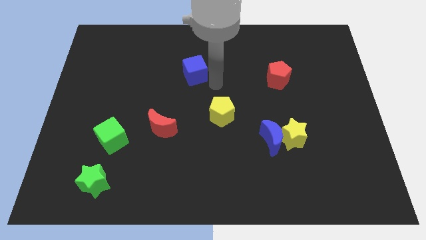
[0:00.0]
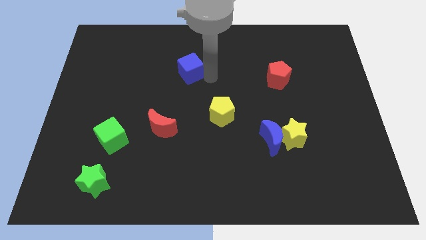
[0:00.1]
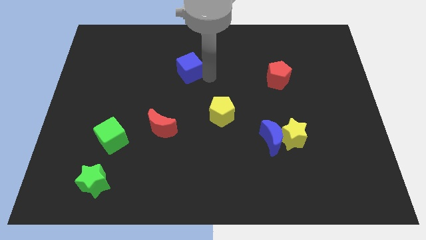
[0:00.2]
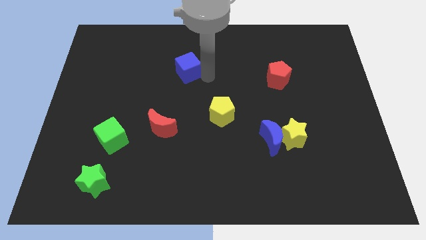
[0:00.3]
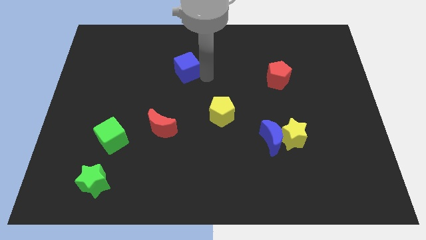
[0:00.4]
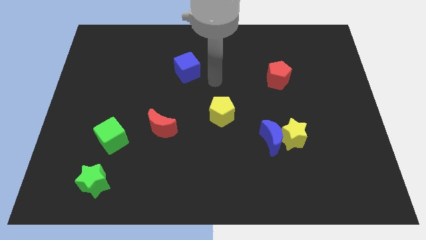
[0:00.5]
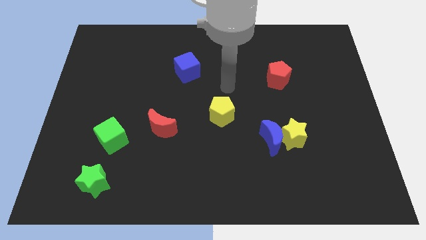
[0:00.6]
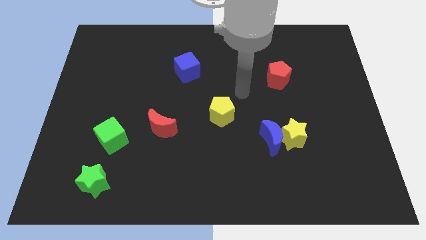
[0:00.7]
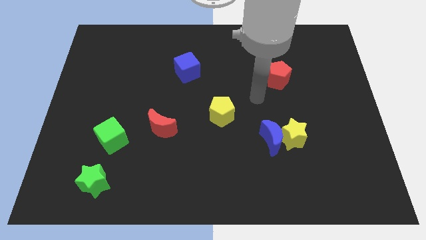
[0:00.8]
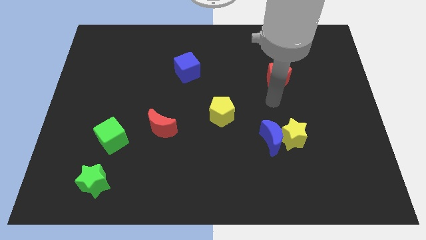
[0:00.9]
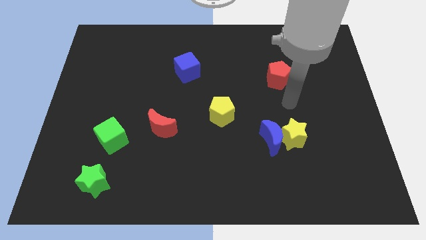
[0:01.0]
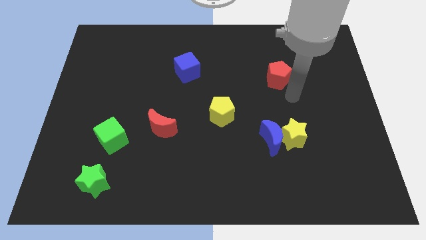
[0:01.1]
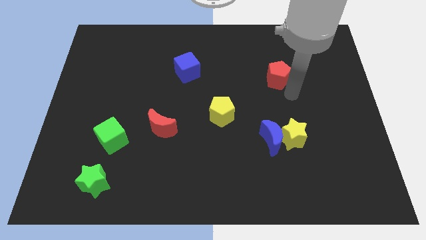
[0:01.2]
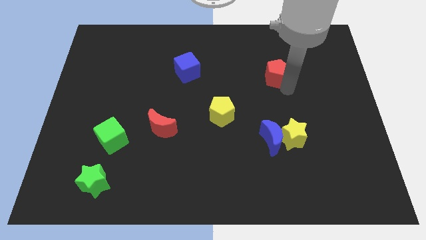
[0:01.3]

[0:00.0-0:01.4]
move arm to the red pentagon

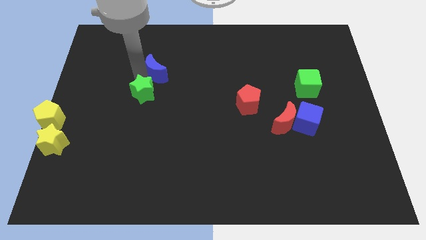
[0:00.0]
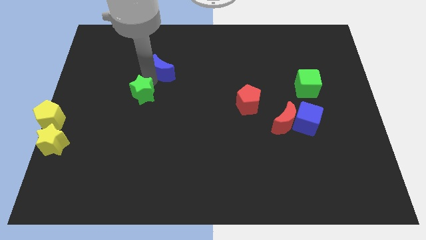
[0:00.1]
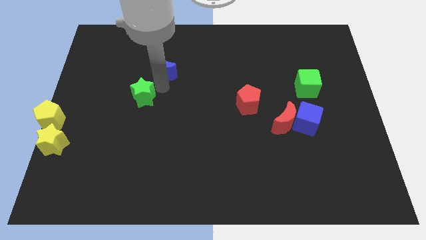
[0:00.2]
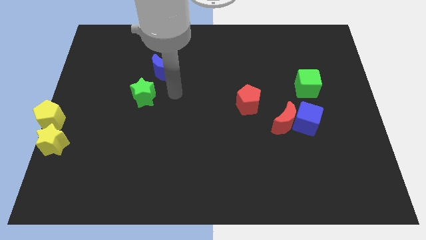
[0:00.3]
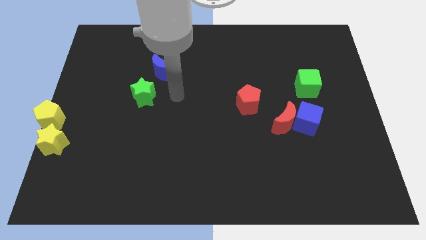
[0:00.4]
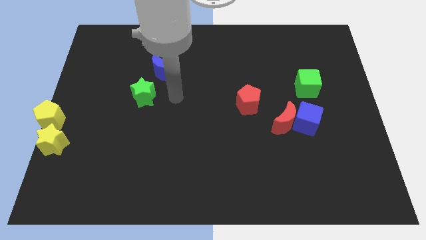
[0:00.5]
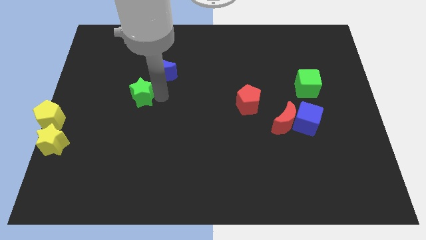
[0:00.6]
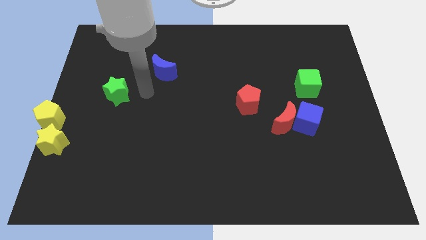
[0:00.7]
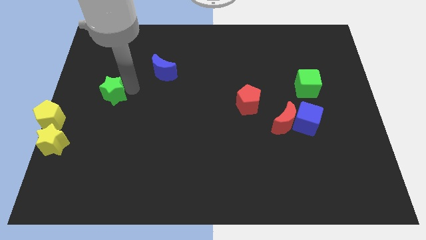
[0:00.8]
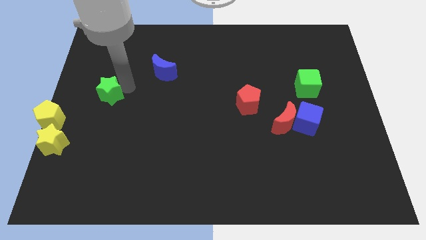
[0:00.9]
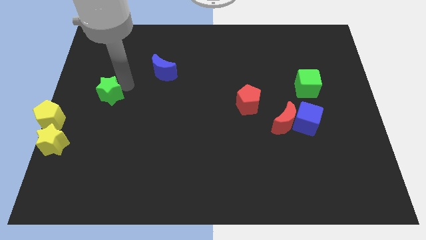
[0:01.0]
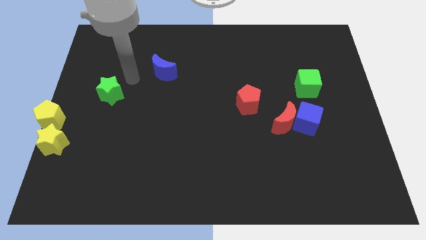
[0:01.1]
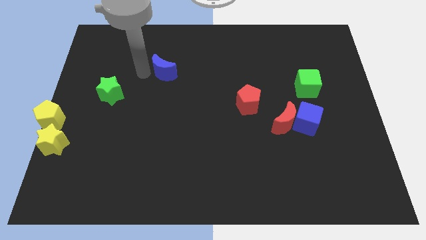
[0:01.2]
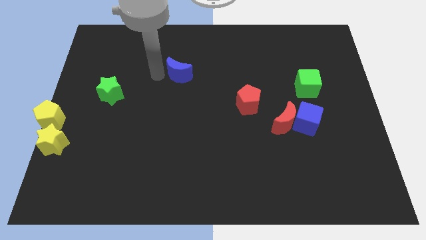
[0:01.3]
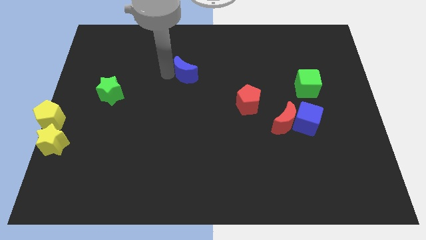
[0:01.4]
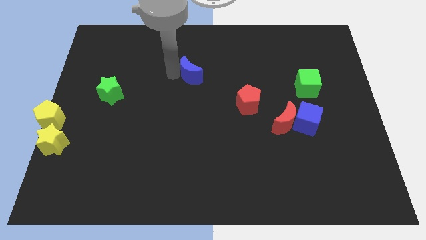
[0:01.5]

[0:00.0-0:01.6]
slightly push the green star to the left side

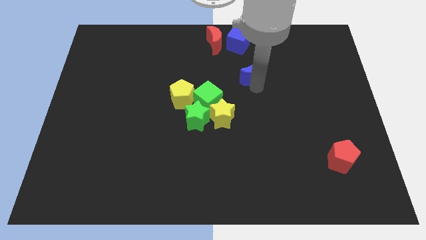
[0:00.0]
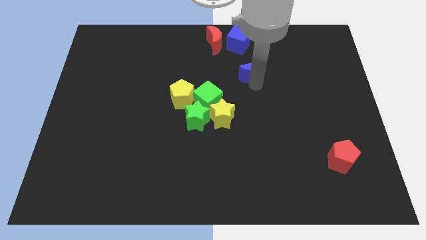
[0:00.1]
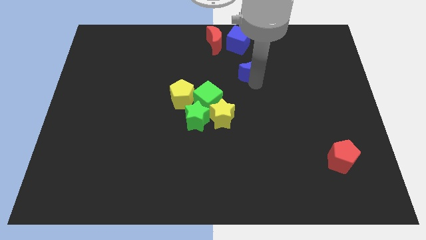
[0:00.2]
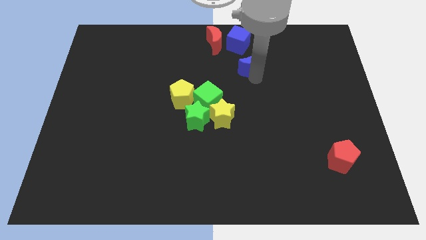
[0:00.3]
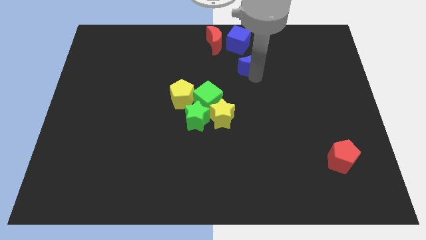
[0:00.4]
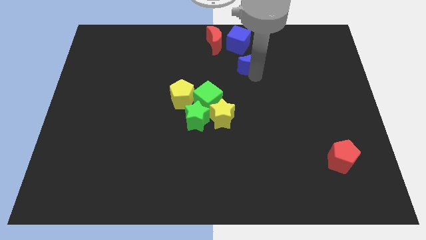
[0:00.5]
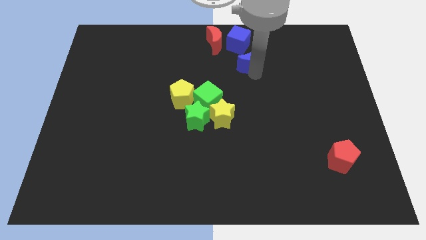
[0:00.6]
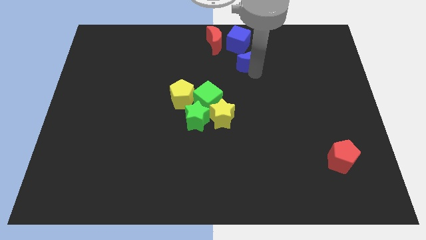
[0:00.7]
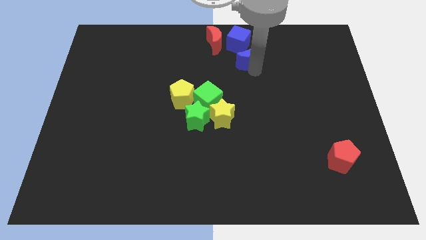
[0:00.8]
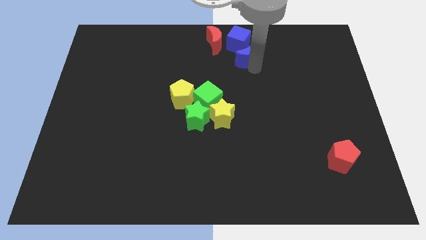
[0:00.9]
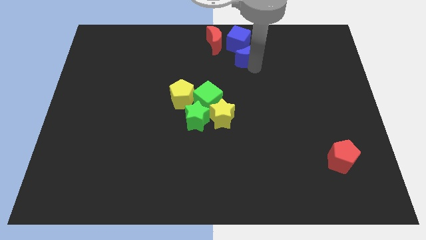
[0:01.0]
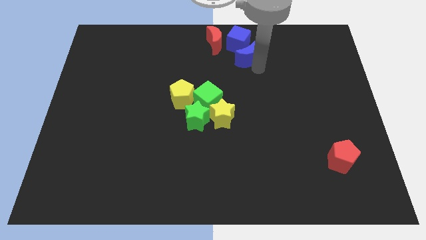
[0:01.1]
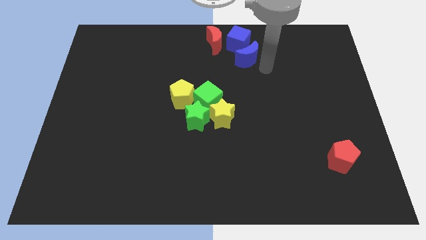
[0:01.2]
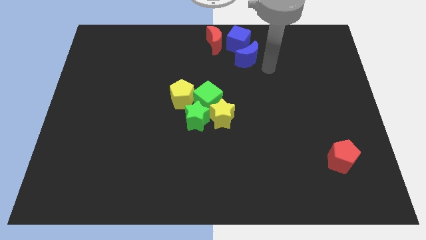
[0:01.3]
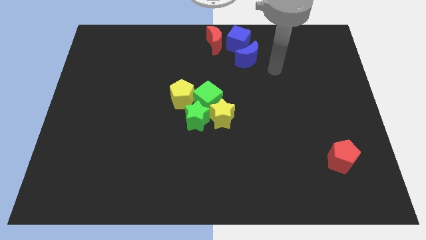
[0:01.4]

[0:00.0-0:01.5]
push the blue crescent below to the blue cube

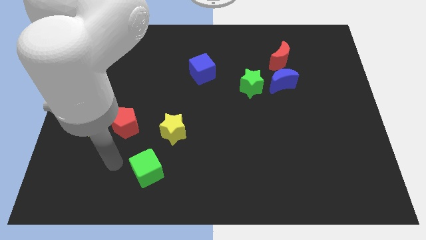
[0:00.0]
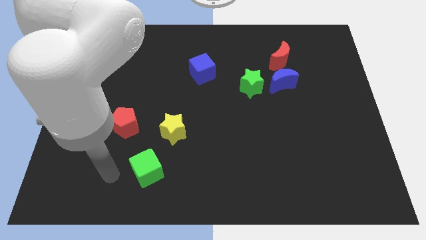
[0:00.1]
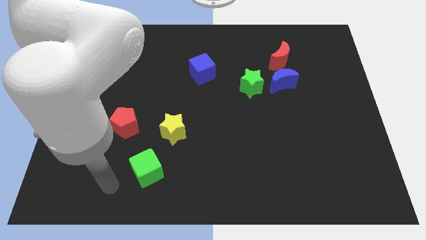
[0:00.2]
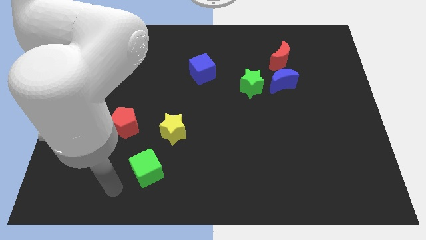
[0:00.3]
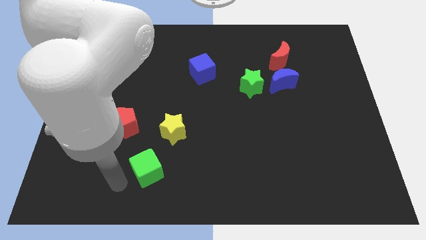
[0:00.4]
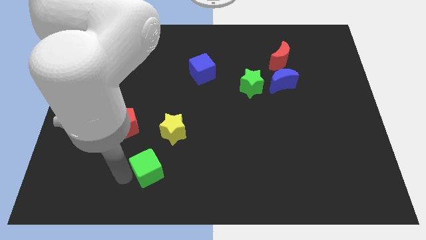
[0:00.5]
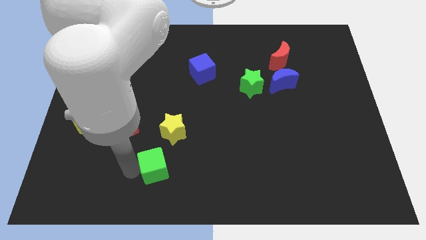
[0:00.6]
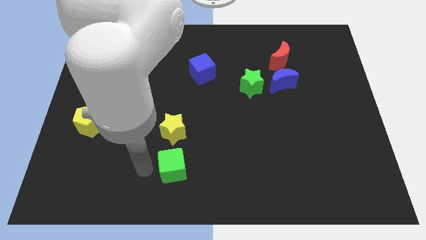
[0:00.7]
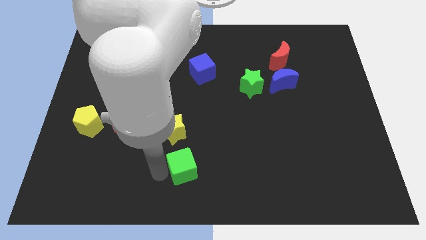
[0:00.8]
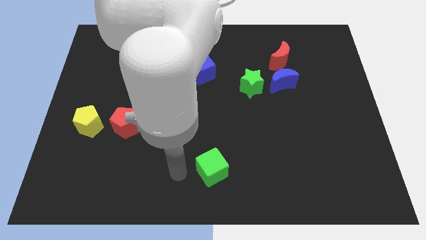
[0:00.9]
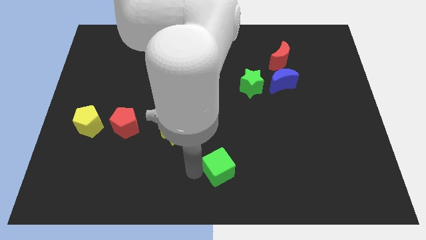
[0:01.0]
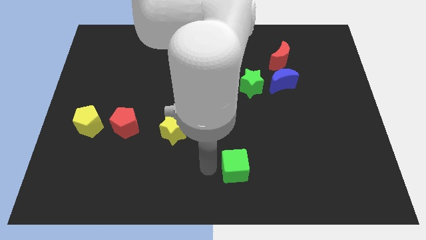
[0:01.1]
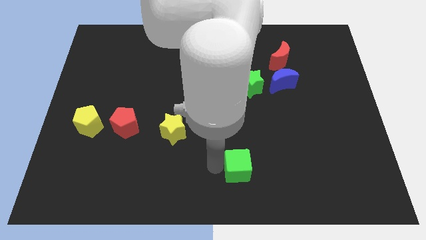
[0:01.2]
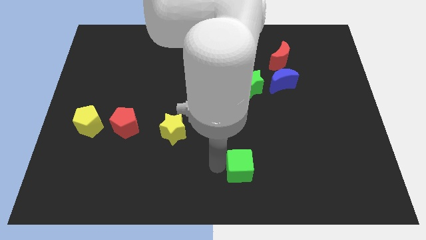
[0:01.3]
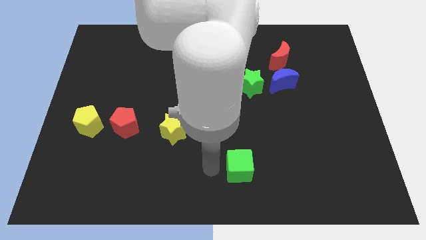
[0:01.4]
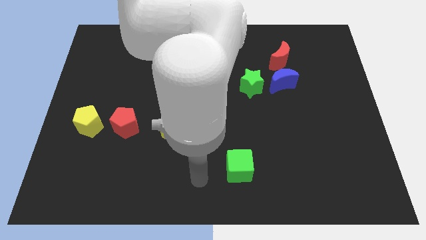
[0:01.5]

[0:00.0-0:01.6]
place the green cube to the center

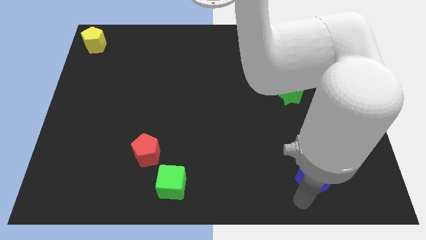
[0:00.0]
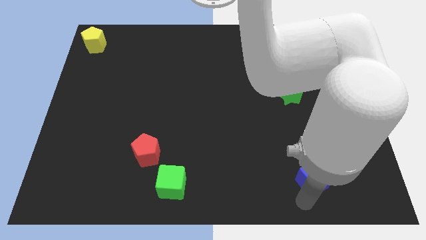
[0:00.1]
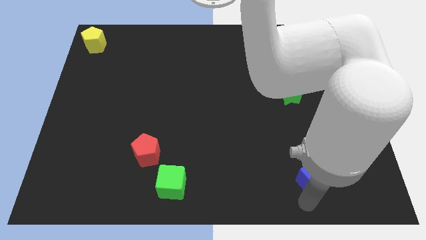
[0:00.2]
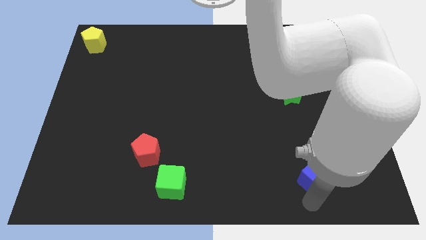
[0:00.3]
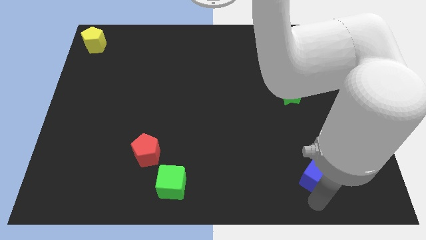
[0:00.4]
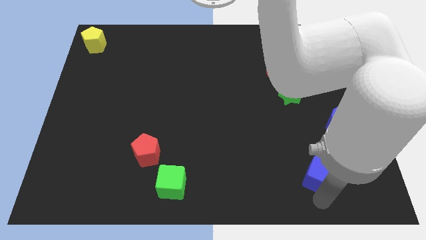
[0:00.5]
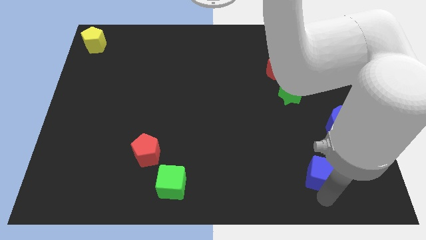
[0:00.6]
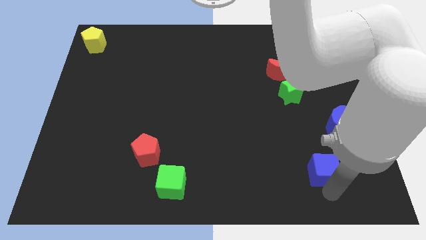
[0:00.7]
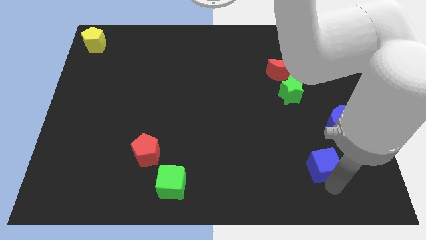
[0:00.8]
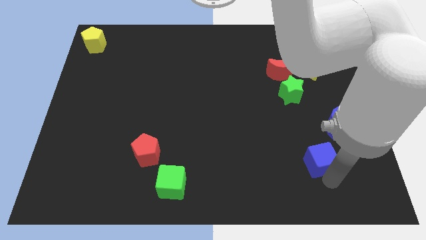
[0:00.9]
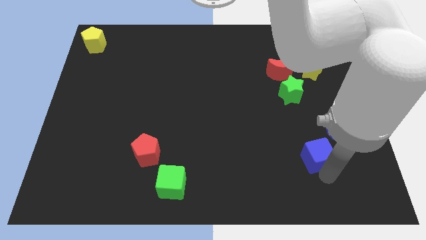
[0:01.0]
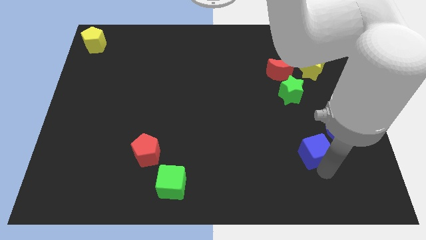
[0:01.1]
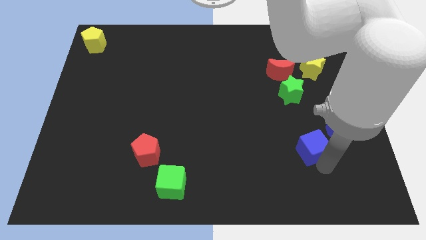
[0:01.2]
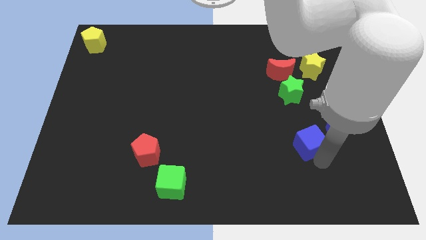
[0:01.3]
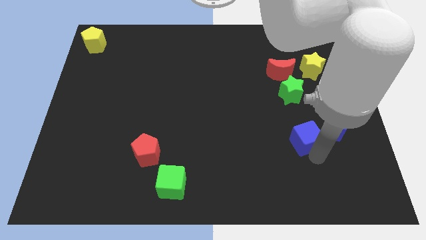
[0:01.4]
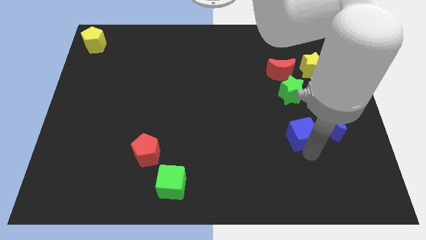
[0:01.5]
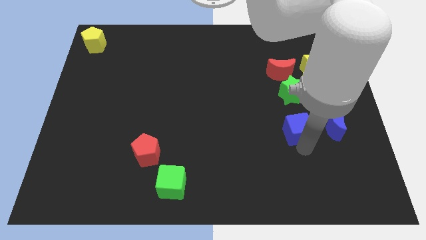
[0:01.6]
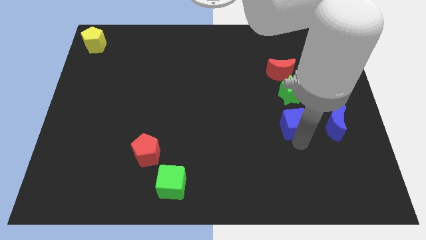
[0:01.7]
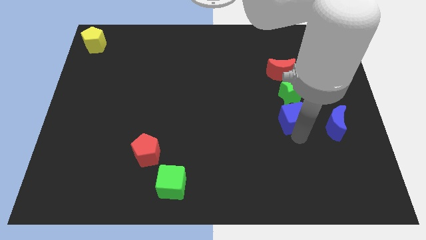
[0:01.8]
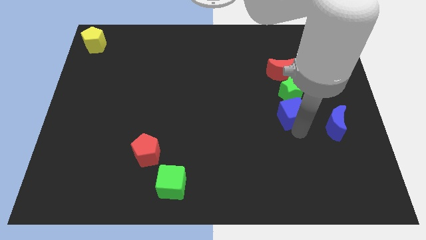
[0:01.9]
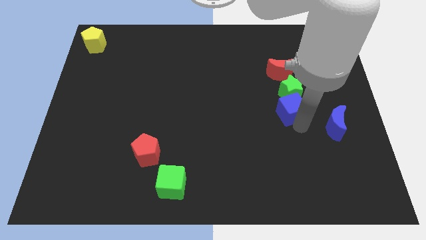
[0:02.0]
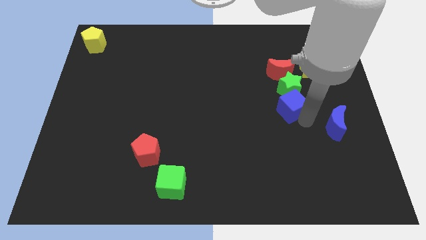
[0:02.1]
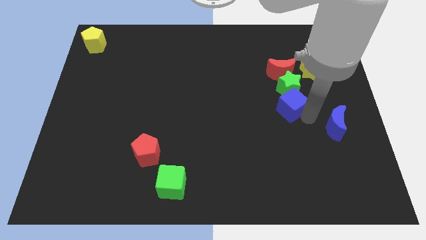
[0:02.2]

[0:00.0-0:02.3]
move the blue cube below the green star

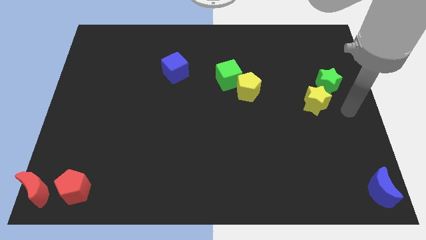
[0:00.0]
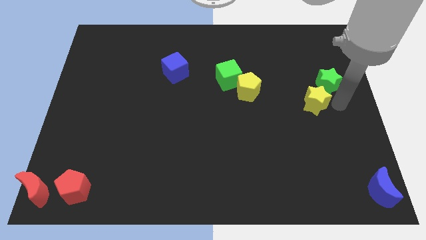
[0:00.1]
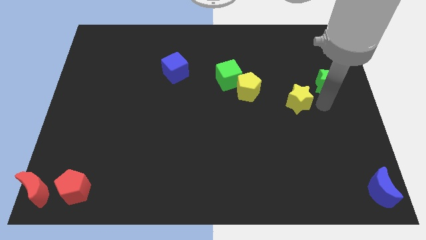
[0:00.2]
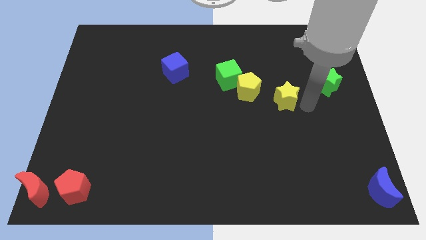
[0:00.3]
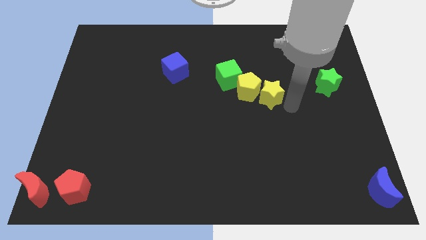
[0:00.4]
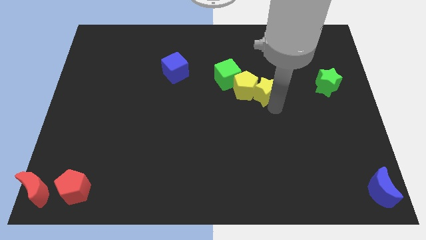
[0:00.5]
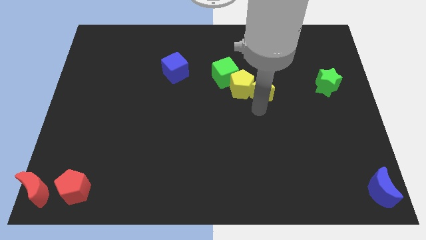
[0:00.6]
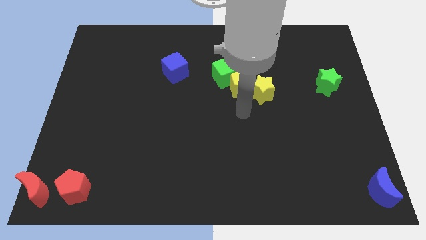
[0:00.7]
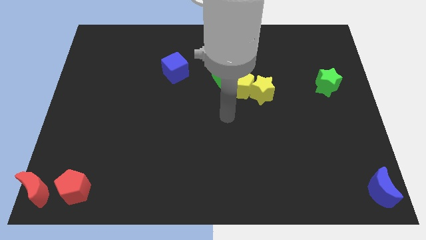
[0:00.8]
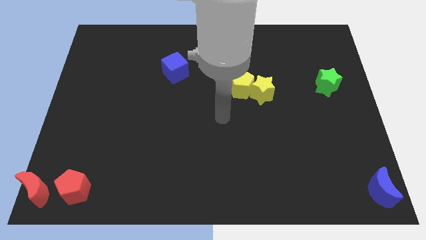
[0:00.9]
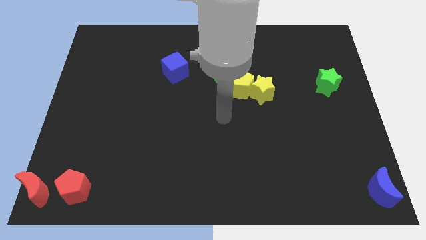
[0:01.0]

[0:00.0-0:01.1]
move the yellow star towards the right of the yellow pentagon
